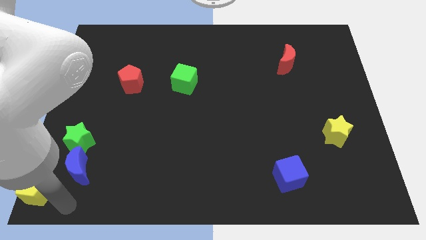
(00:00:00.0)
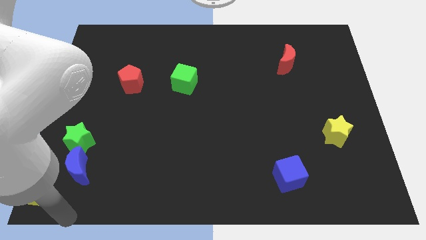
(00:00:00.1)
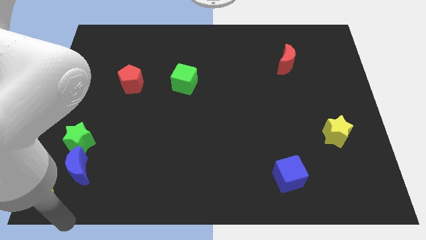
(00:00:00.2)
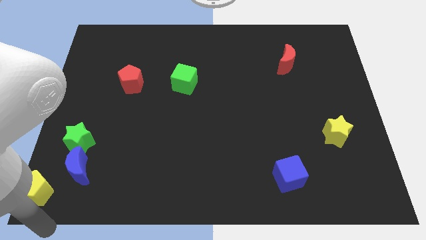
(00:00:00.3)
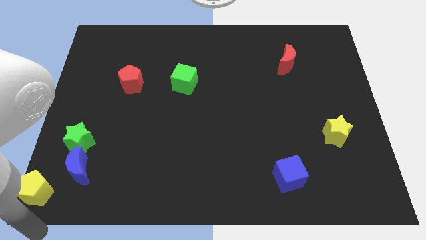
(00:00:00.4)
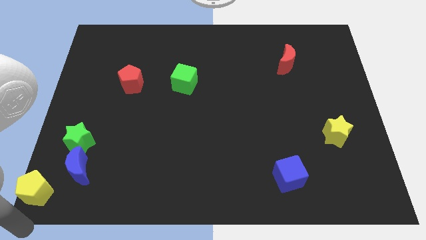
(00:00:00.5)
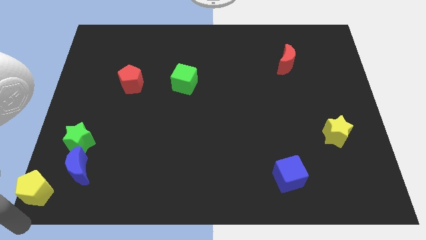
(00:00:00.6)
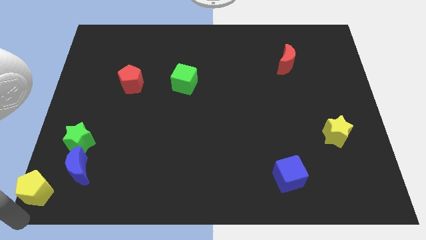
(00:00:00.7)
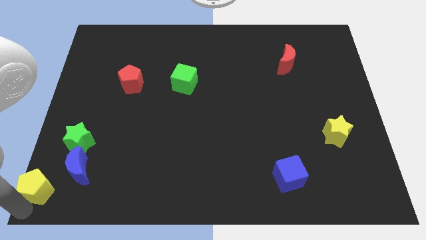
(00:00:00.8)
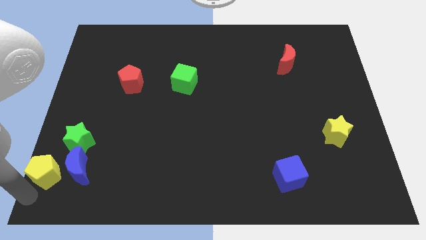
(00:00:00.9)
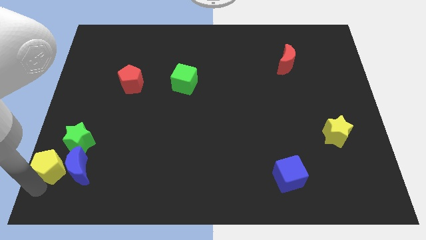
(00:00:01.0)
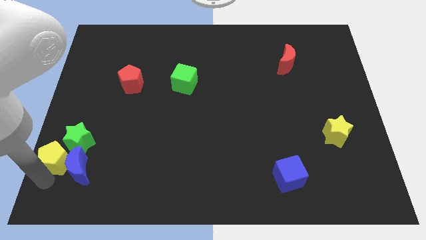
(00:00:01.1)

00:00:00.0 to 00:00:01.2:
move the yellow pentagon left to the blue crescent

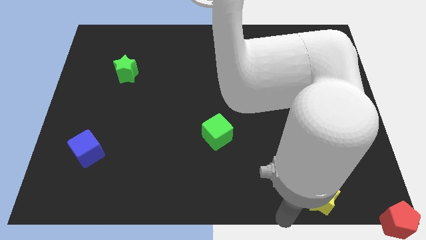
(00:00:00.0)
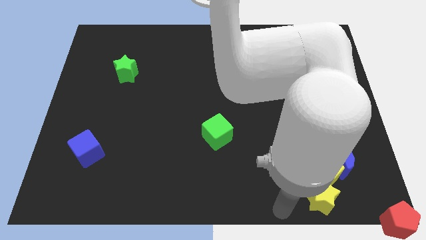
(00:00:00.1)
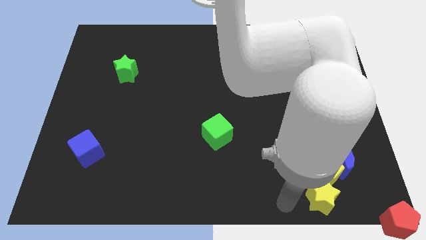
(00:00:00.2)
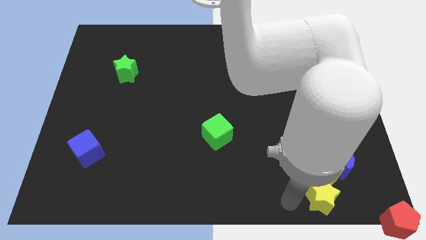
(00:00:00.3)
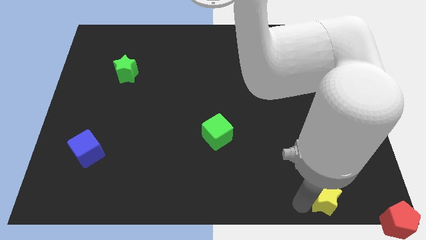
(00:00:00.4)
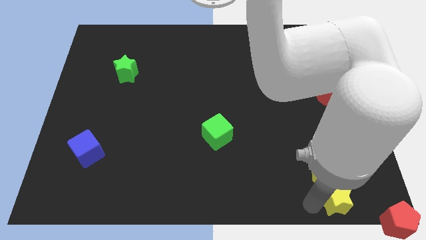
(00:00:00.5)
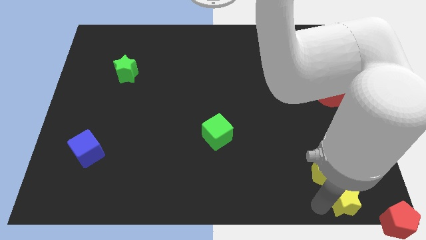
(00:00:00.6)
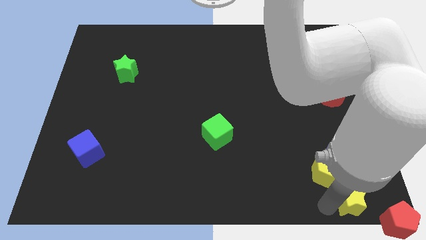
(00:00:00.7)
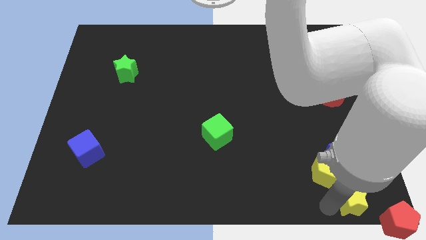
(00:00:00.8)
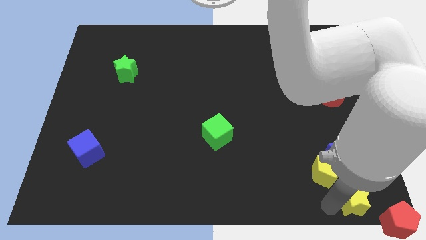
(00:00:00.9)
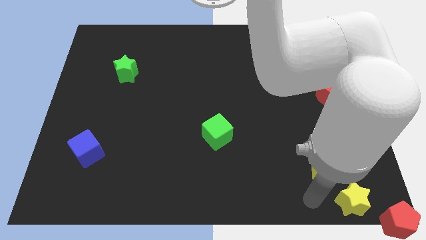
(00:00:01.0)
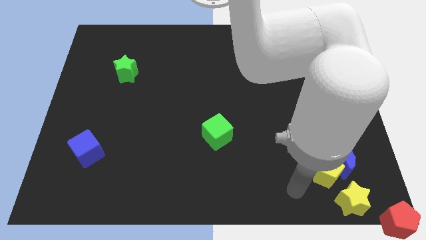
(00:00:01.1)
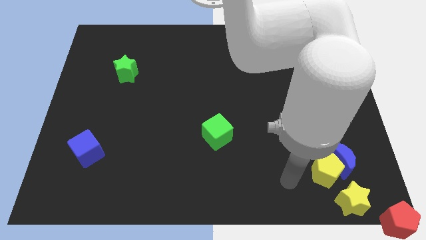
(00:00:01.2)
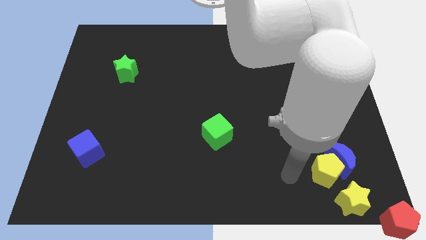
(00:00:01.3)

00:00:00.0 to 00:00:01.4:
put the yellow star in between the yellow pentagon and red pentagon

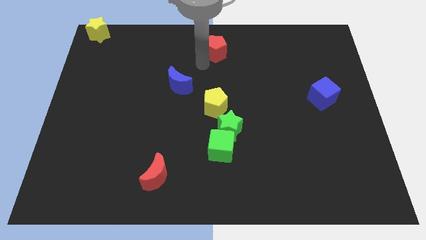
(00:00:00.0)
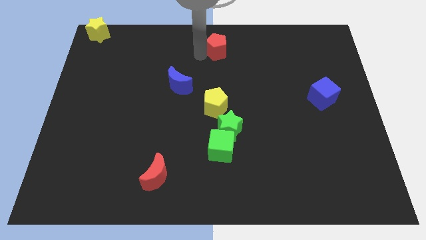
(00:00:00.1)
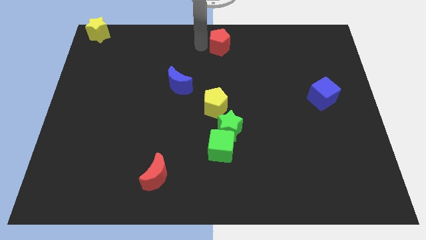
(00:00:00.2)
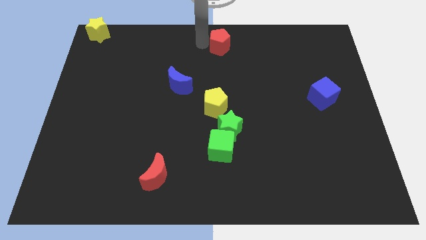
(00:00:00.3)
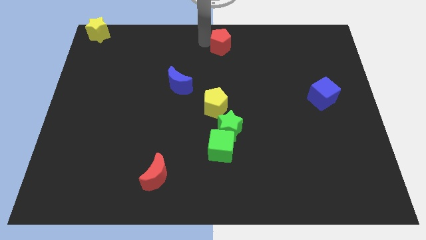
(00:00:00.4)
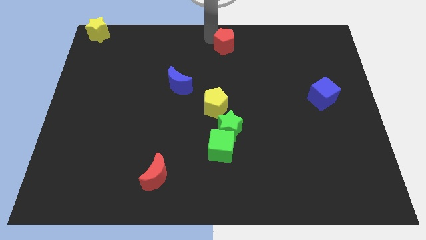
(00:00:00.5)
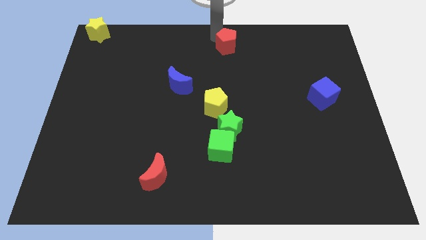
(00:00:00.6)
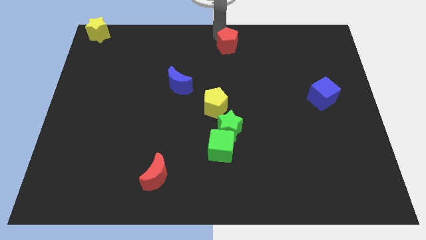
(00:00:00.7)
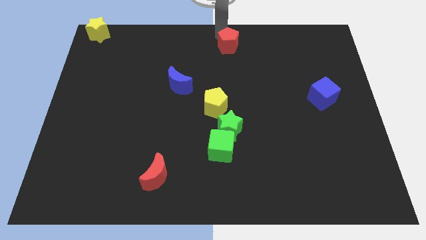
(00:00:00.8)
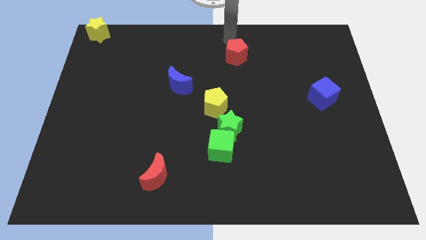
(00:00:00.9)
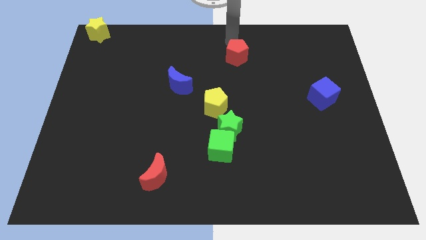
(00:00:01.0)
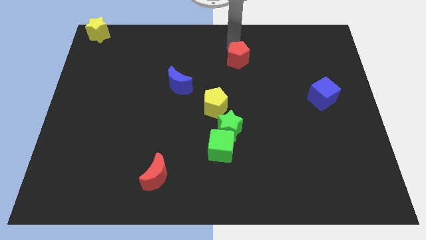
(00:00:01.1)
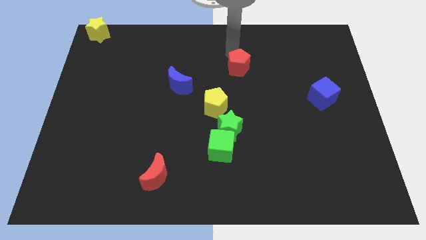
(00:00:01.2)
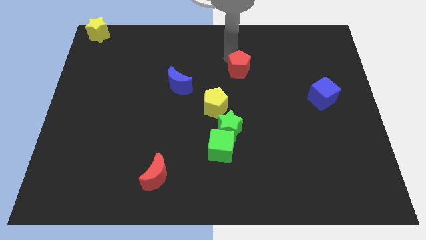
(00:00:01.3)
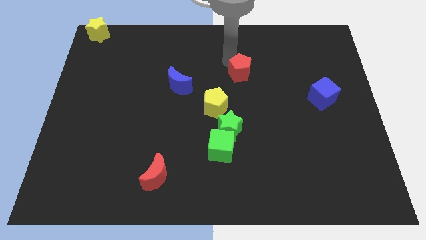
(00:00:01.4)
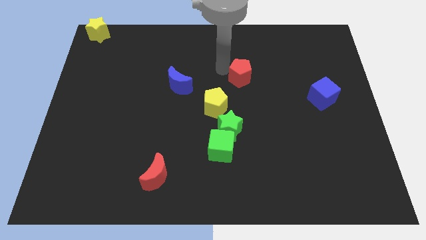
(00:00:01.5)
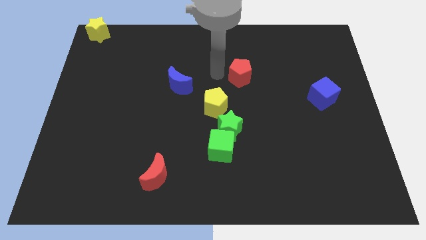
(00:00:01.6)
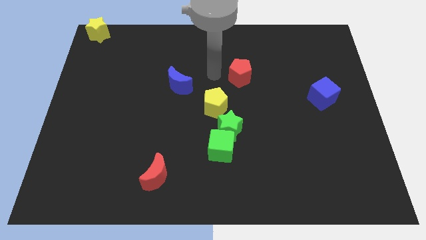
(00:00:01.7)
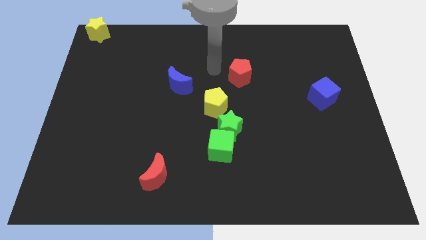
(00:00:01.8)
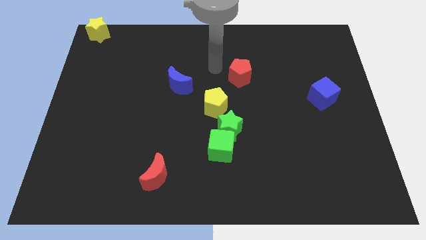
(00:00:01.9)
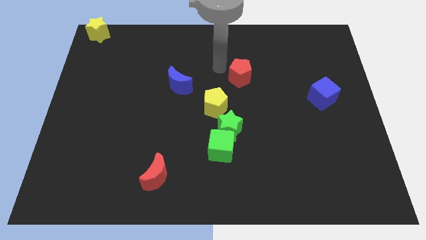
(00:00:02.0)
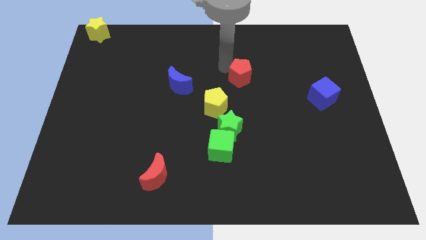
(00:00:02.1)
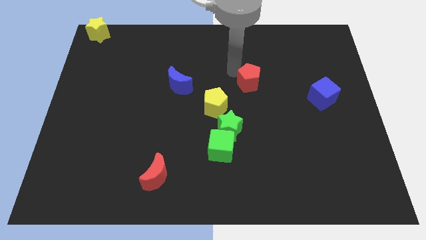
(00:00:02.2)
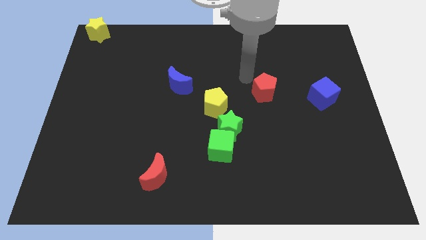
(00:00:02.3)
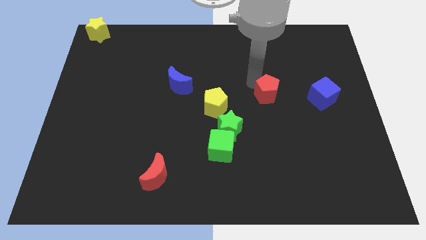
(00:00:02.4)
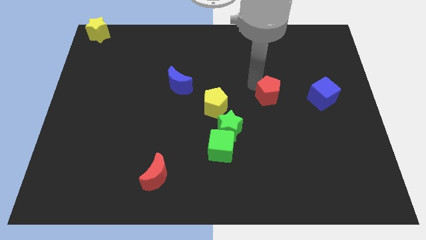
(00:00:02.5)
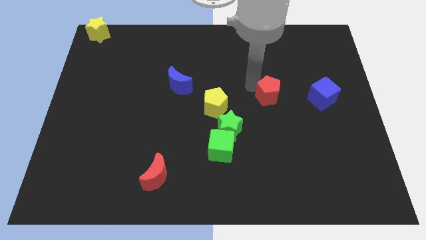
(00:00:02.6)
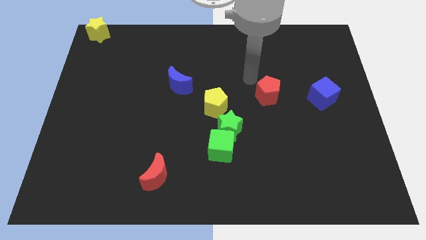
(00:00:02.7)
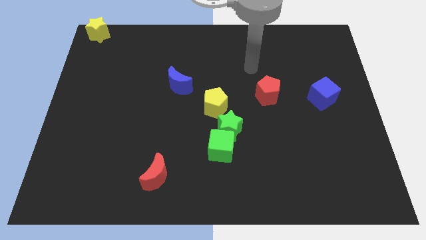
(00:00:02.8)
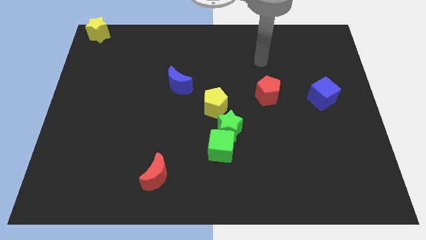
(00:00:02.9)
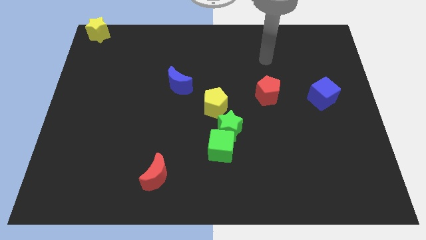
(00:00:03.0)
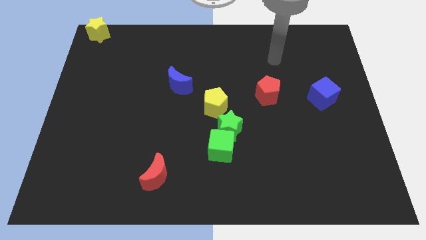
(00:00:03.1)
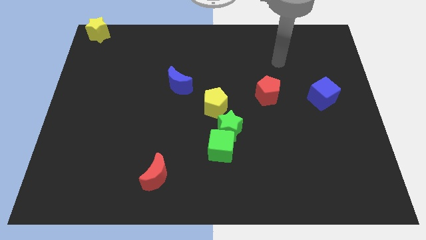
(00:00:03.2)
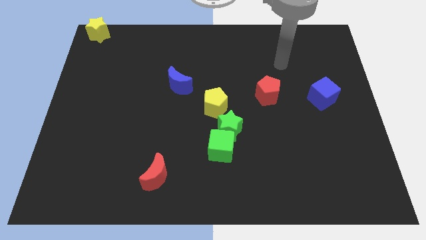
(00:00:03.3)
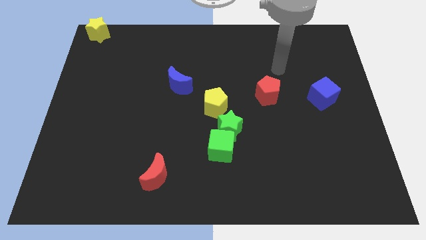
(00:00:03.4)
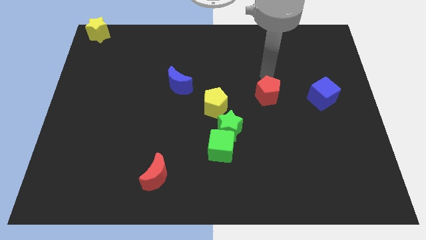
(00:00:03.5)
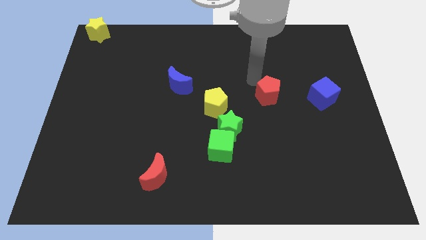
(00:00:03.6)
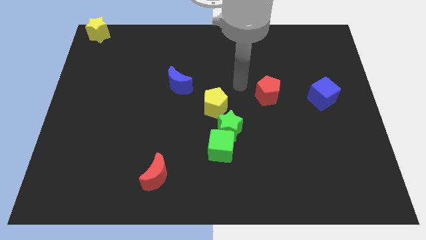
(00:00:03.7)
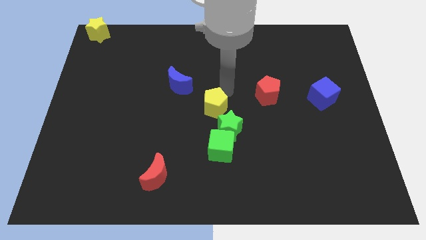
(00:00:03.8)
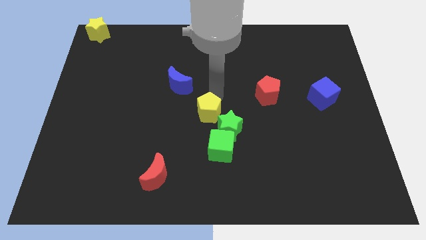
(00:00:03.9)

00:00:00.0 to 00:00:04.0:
place the red pentagon in between the blue cube and yellow pentagon

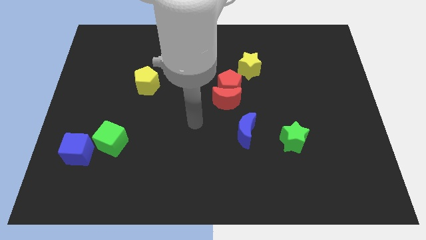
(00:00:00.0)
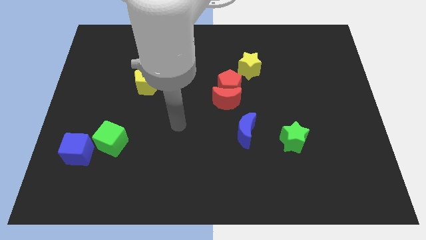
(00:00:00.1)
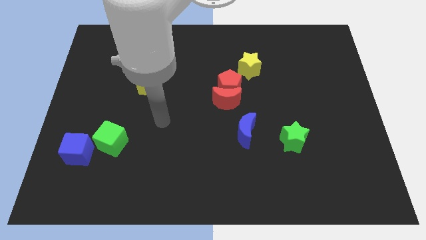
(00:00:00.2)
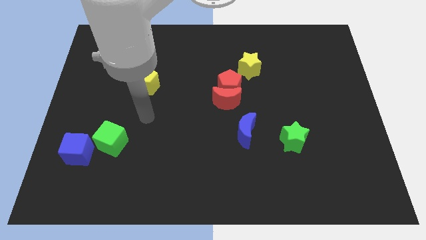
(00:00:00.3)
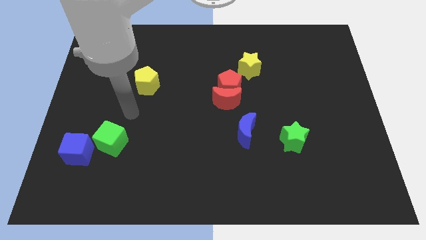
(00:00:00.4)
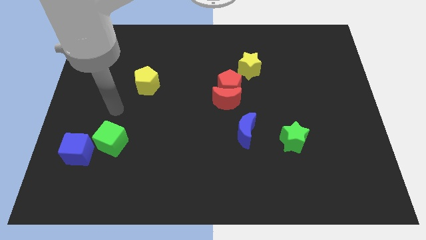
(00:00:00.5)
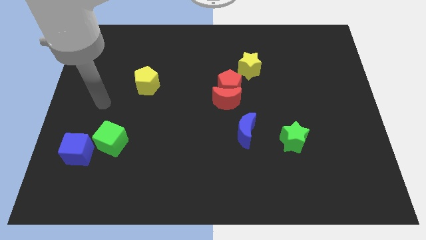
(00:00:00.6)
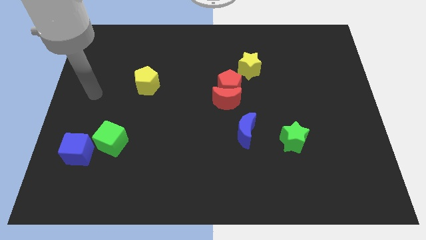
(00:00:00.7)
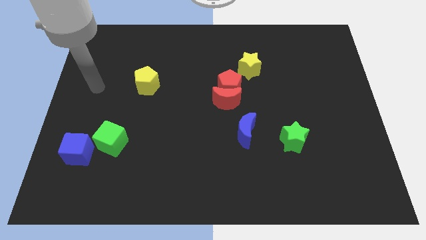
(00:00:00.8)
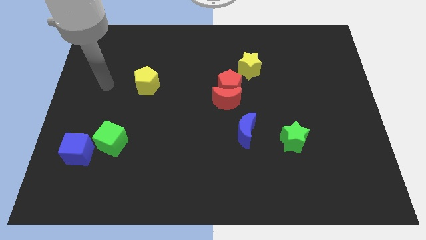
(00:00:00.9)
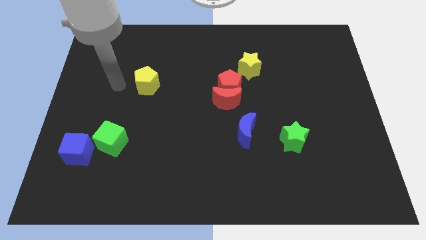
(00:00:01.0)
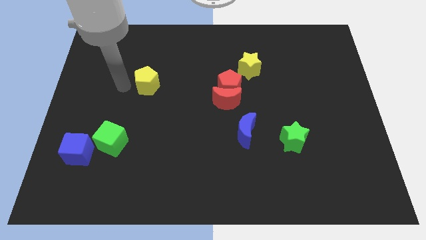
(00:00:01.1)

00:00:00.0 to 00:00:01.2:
place your hand left to the yellow pentagon

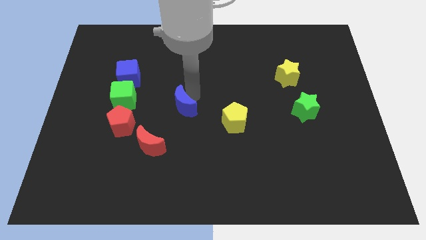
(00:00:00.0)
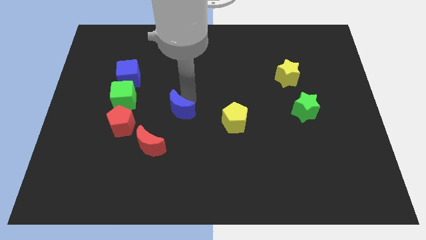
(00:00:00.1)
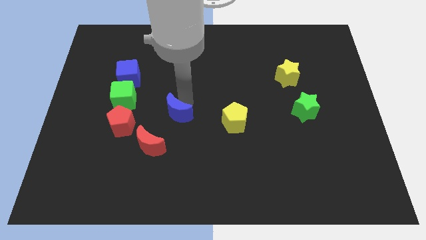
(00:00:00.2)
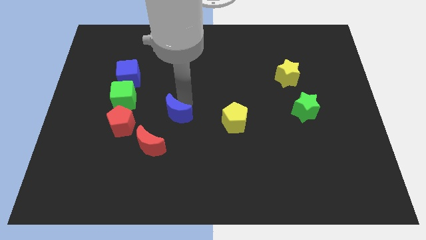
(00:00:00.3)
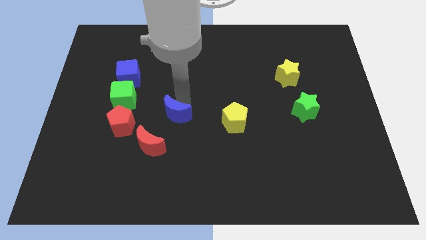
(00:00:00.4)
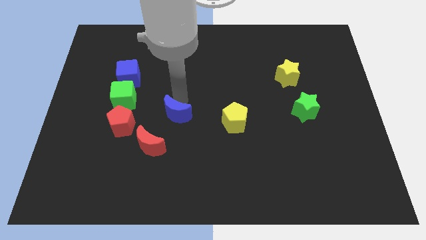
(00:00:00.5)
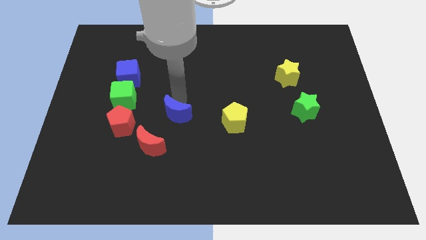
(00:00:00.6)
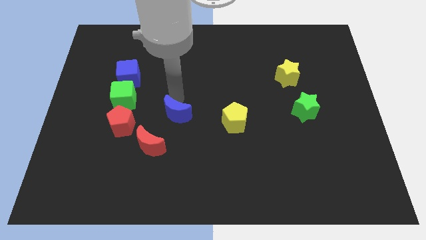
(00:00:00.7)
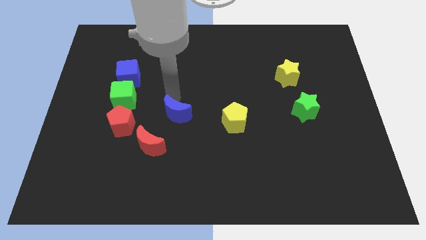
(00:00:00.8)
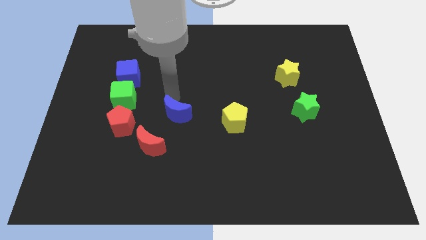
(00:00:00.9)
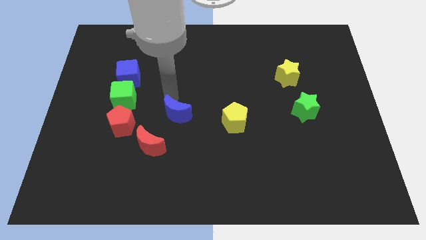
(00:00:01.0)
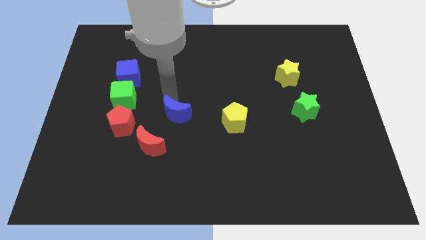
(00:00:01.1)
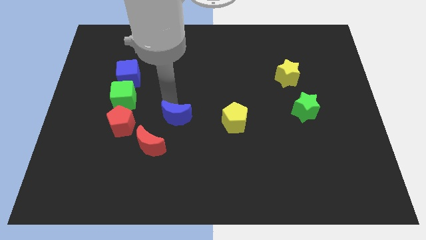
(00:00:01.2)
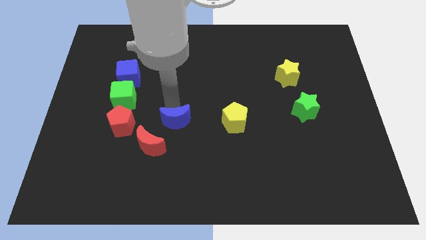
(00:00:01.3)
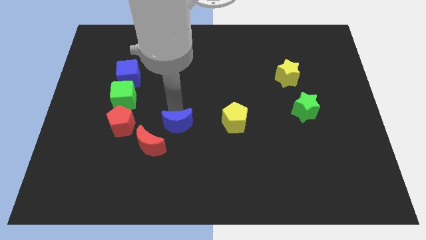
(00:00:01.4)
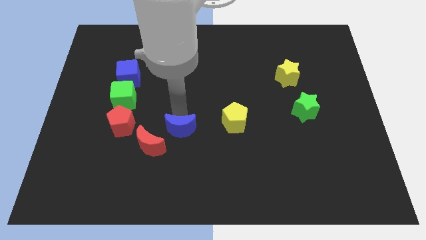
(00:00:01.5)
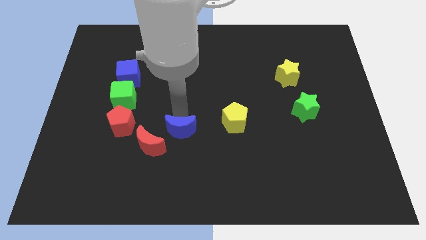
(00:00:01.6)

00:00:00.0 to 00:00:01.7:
place blue moon to the right of red pentagon
